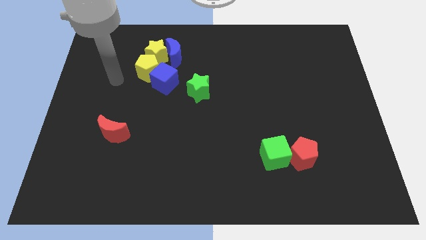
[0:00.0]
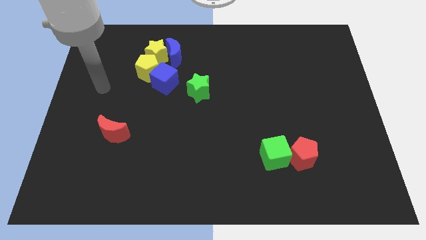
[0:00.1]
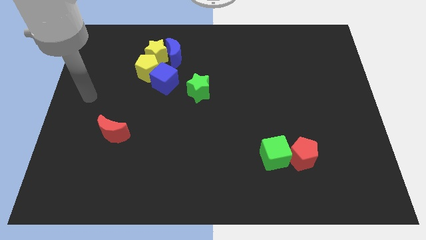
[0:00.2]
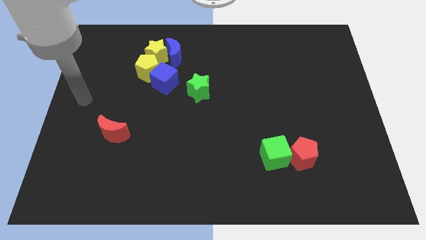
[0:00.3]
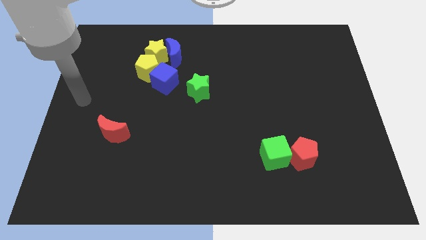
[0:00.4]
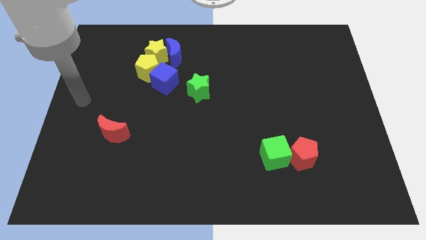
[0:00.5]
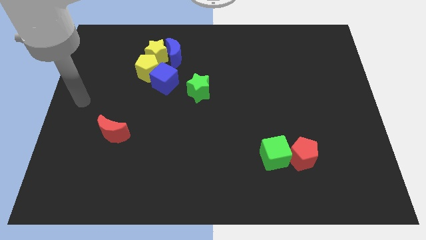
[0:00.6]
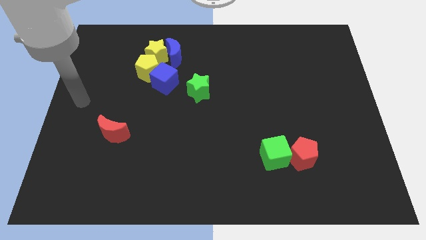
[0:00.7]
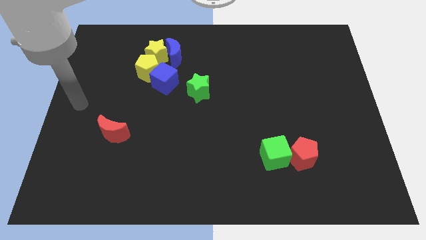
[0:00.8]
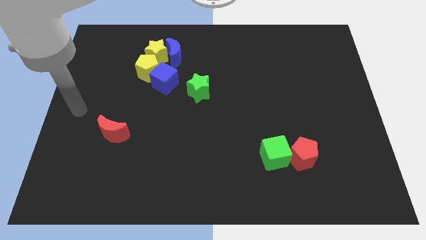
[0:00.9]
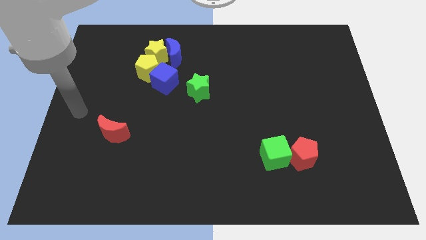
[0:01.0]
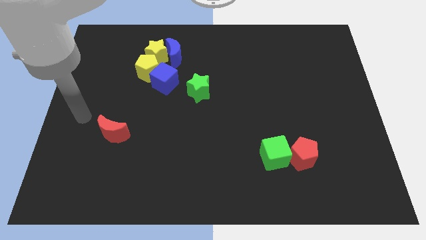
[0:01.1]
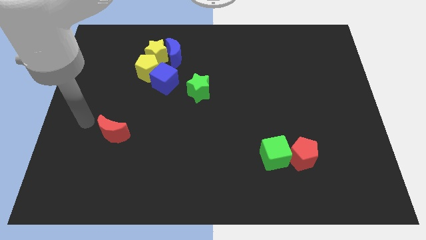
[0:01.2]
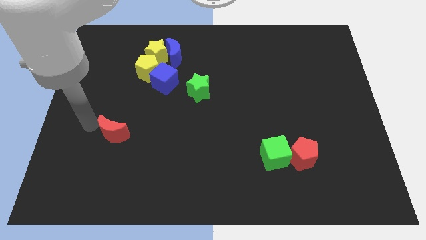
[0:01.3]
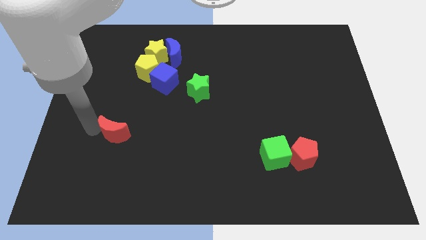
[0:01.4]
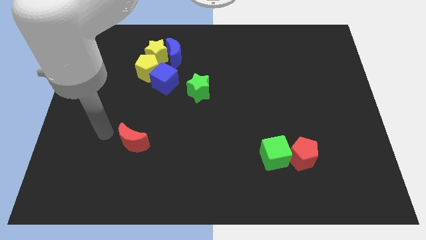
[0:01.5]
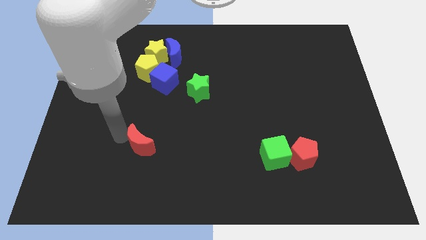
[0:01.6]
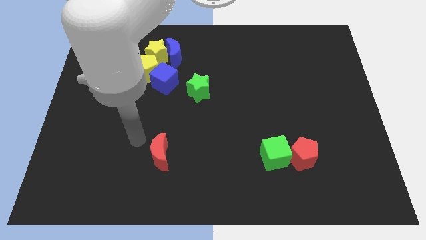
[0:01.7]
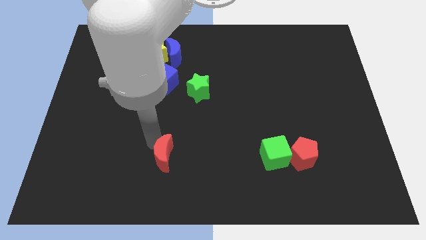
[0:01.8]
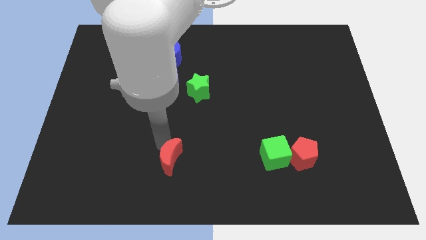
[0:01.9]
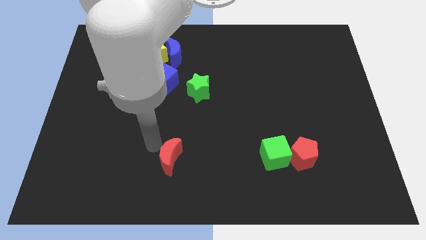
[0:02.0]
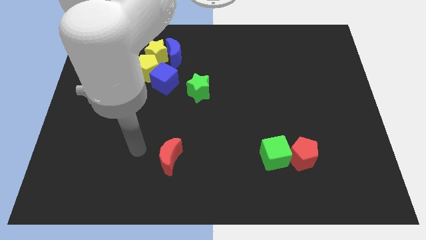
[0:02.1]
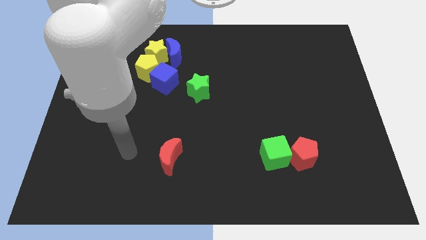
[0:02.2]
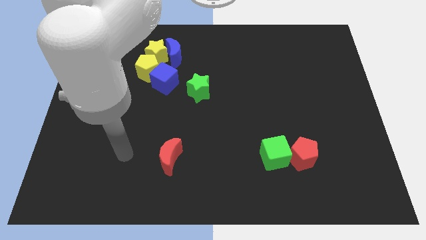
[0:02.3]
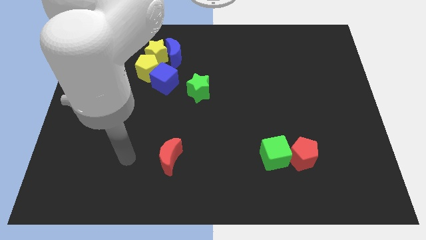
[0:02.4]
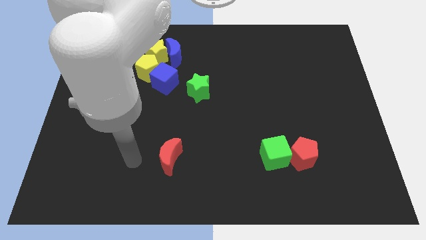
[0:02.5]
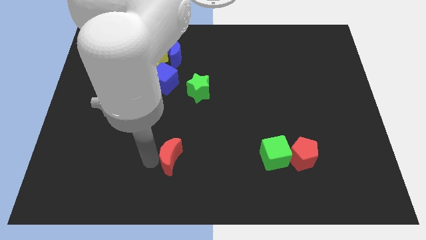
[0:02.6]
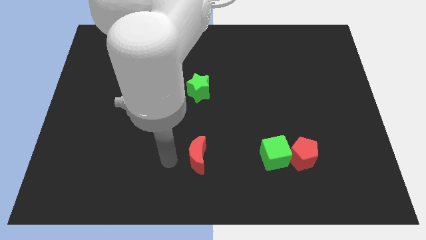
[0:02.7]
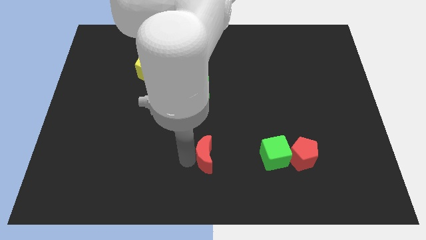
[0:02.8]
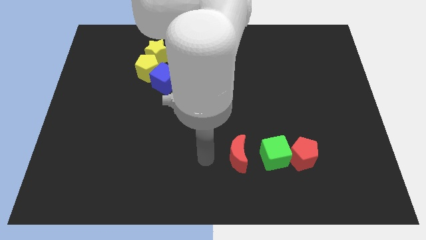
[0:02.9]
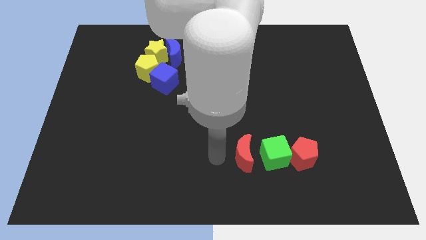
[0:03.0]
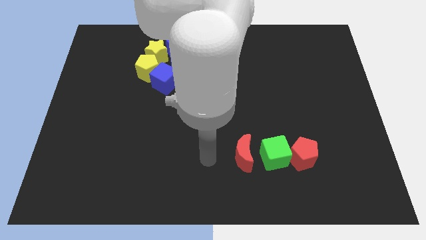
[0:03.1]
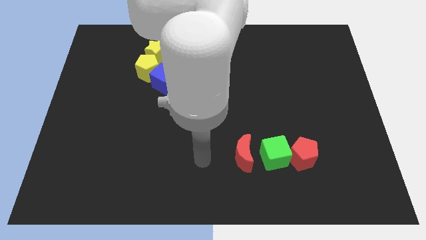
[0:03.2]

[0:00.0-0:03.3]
move the red crescent to the left of the green cube

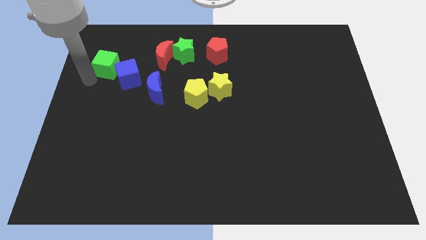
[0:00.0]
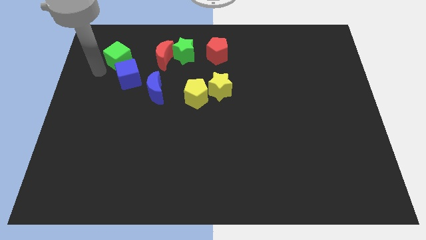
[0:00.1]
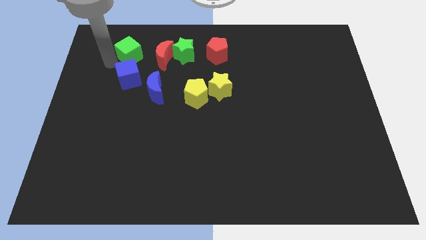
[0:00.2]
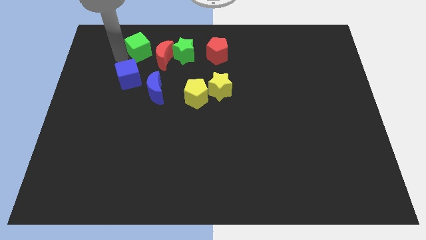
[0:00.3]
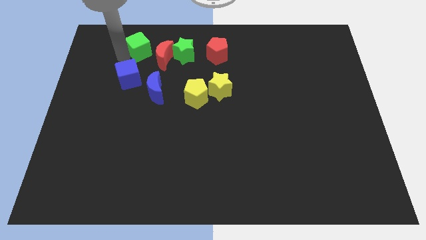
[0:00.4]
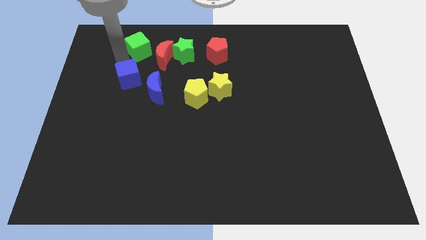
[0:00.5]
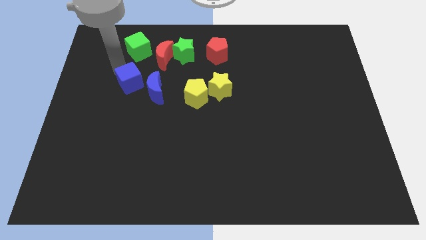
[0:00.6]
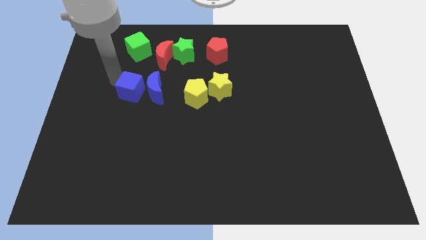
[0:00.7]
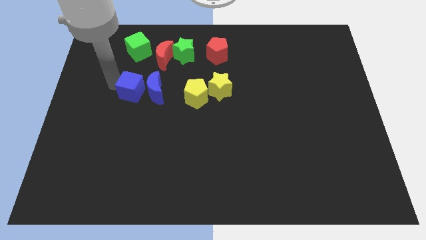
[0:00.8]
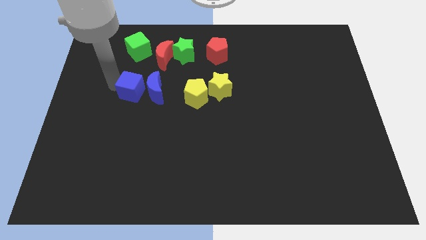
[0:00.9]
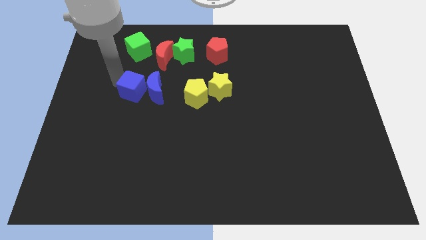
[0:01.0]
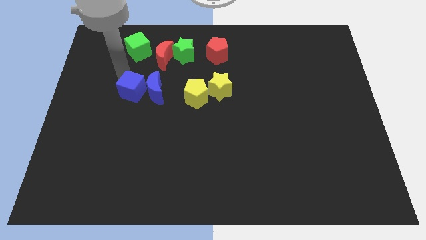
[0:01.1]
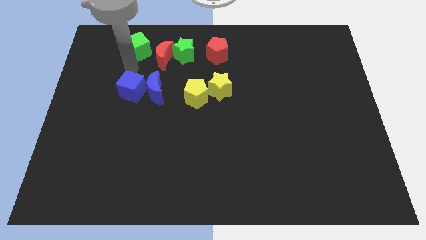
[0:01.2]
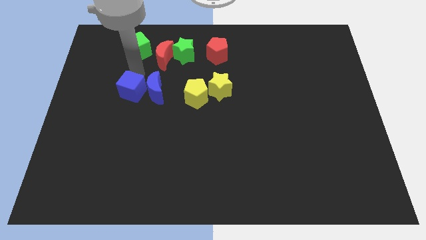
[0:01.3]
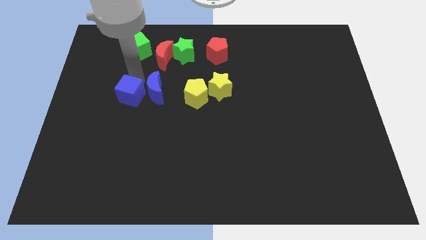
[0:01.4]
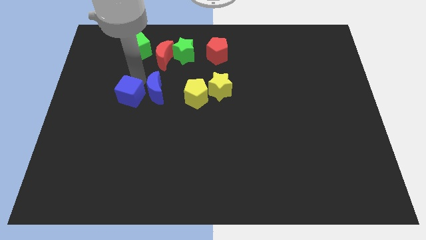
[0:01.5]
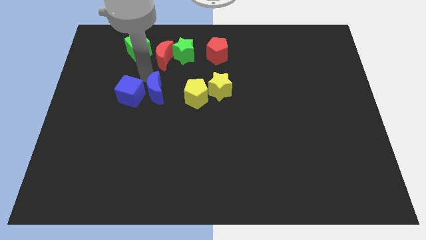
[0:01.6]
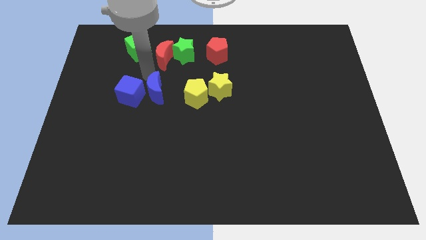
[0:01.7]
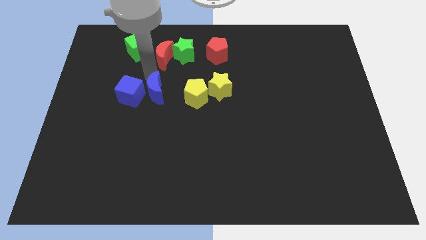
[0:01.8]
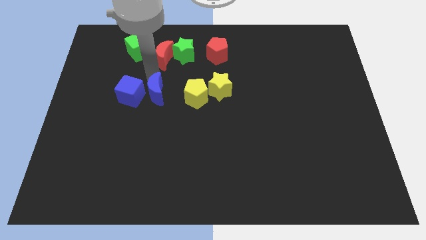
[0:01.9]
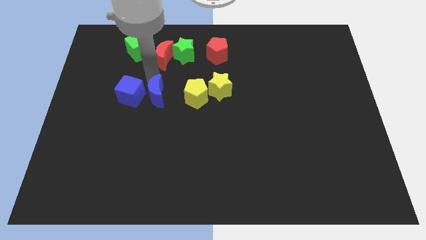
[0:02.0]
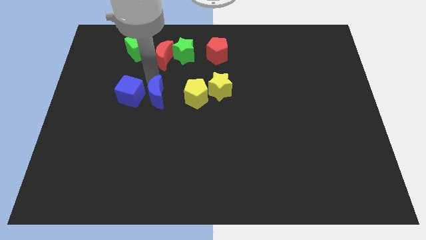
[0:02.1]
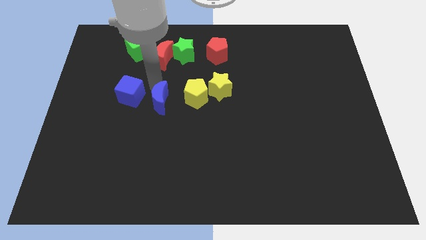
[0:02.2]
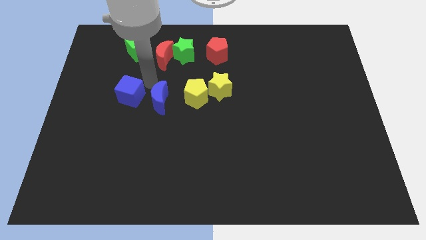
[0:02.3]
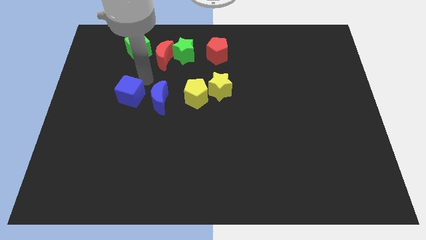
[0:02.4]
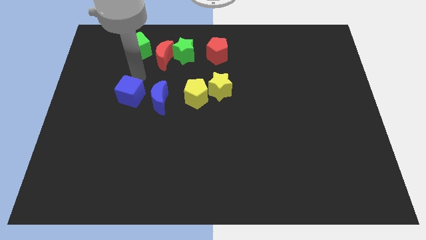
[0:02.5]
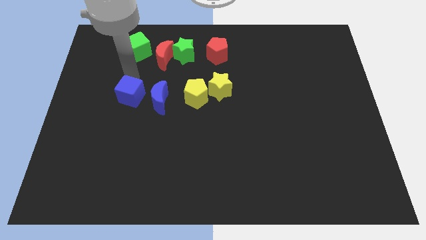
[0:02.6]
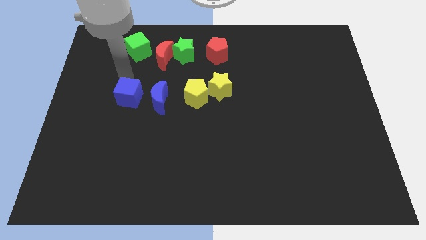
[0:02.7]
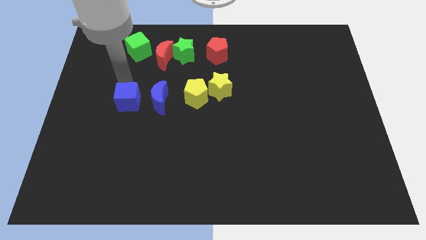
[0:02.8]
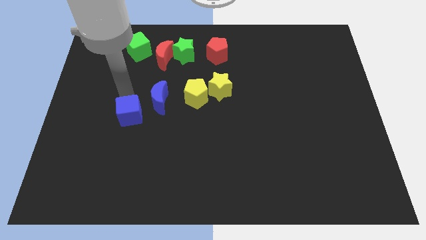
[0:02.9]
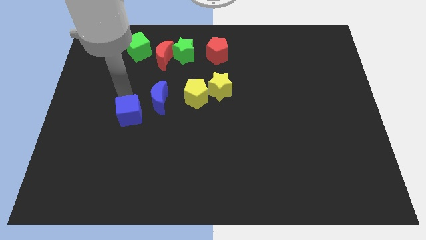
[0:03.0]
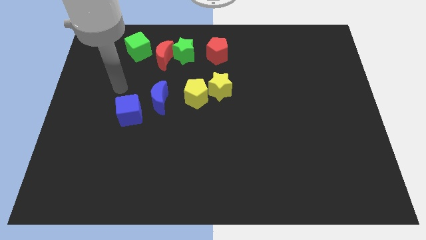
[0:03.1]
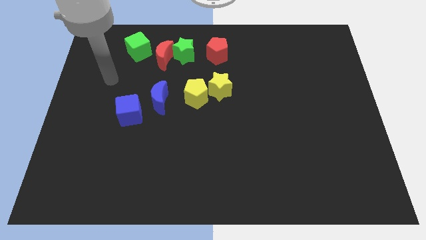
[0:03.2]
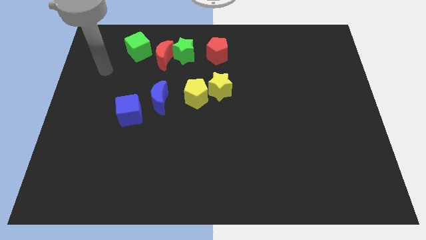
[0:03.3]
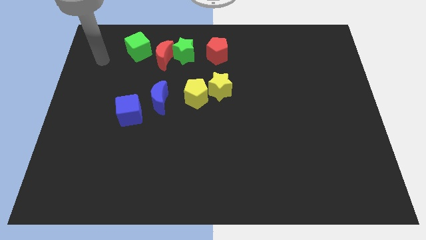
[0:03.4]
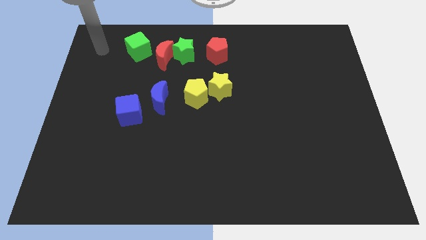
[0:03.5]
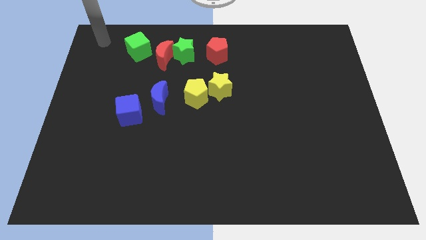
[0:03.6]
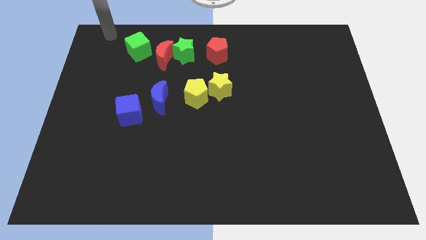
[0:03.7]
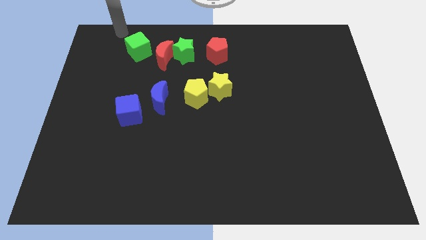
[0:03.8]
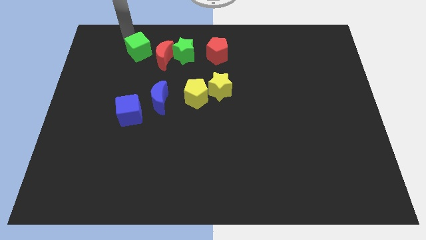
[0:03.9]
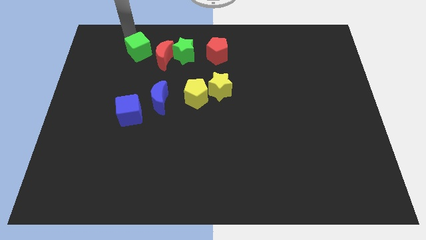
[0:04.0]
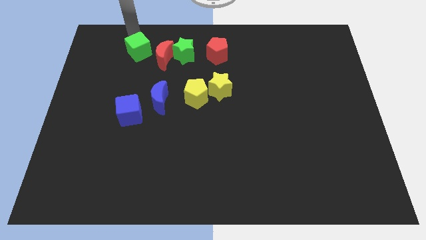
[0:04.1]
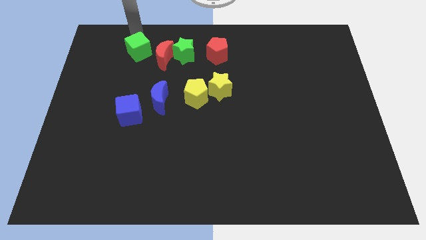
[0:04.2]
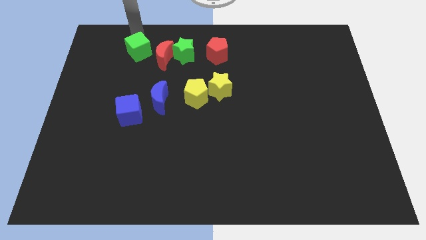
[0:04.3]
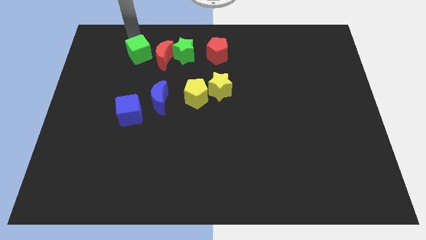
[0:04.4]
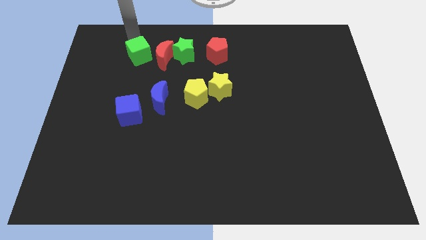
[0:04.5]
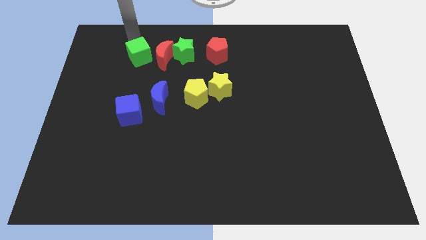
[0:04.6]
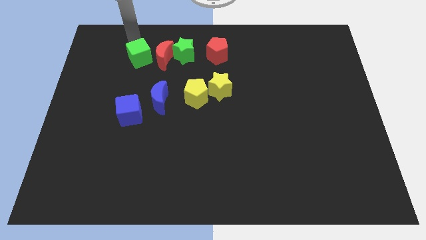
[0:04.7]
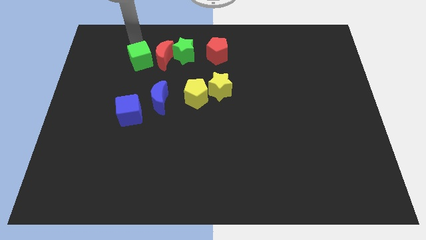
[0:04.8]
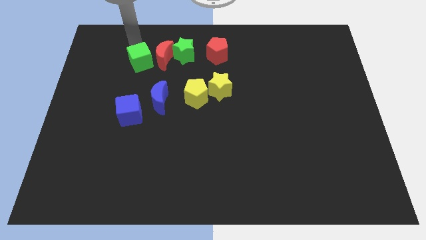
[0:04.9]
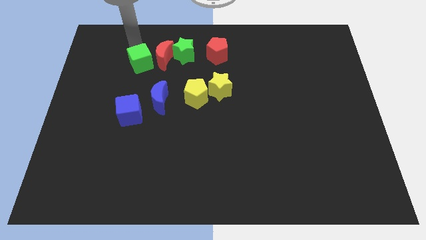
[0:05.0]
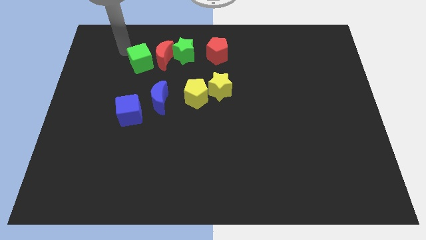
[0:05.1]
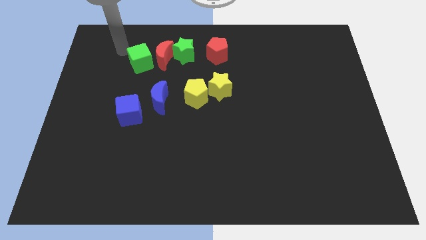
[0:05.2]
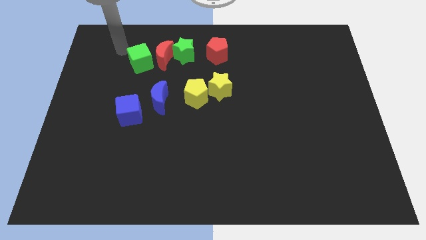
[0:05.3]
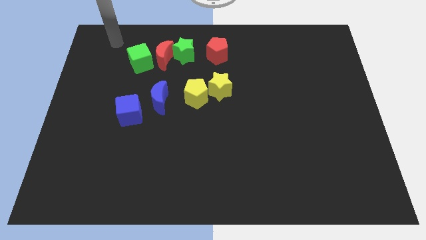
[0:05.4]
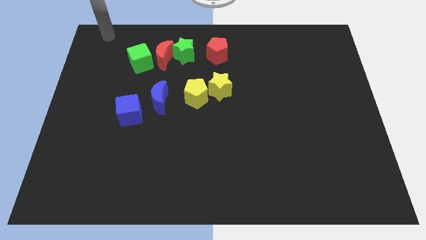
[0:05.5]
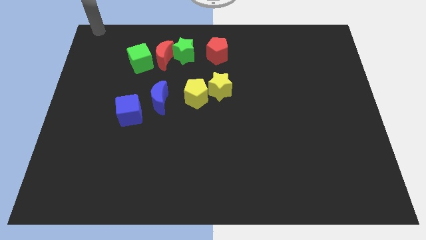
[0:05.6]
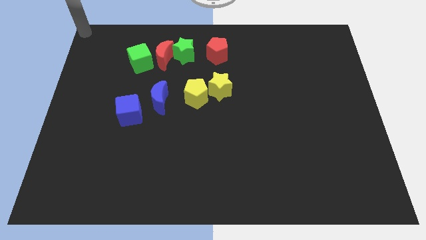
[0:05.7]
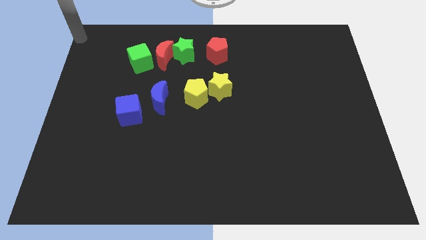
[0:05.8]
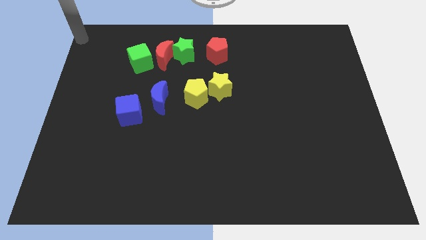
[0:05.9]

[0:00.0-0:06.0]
place the green cube to the left of the red crescent
